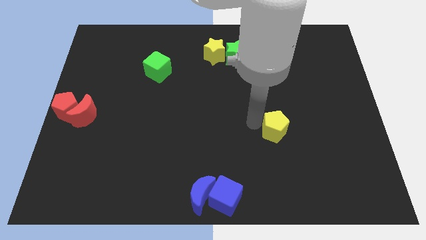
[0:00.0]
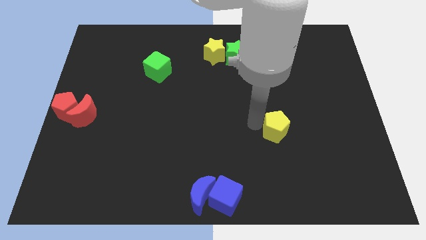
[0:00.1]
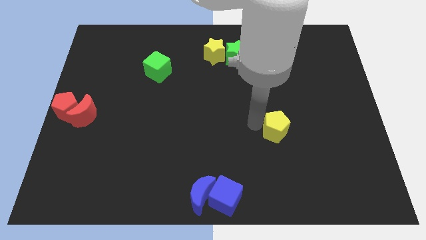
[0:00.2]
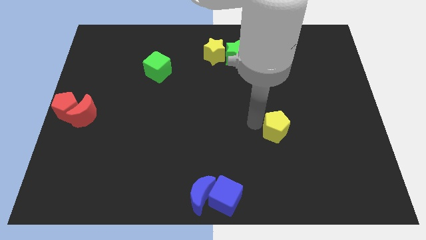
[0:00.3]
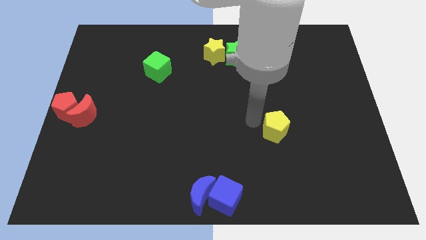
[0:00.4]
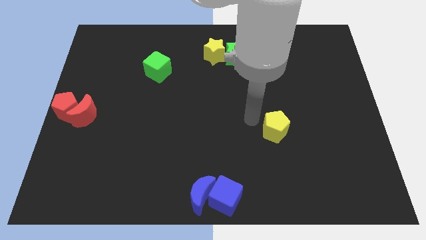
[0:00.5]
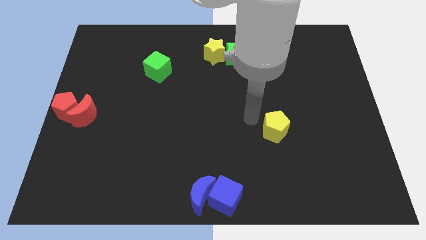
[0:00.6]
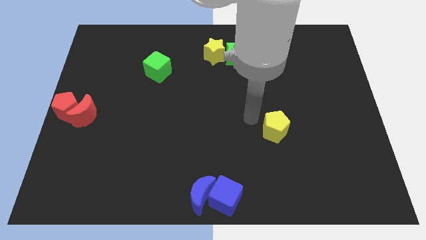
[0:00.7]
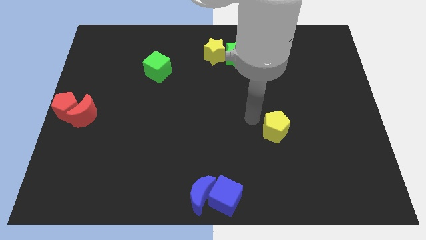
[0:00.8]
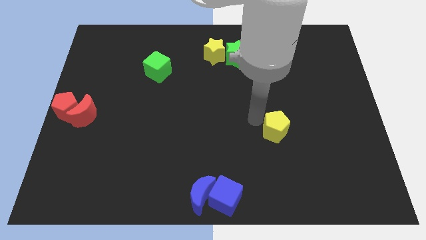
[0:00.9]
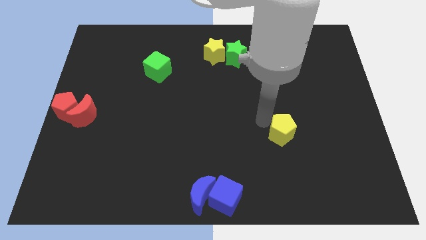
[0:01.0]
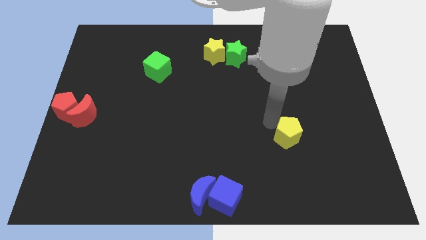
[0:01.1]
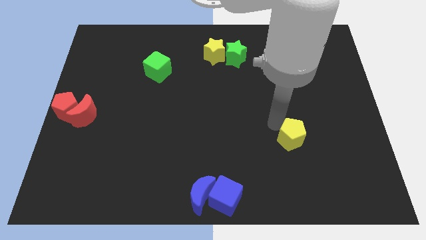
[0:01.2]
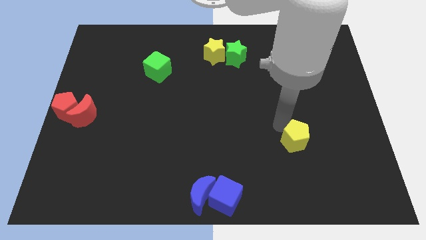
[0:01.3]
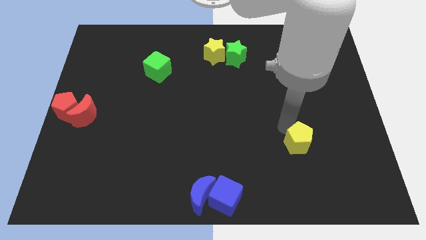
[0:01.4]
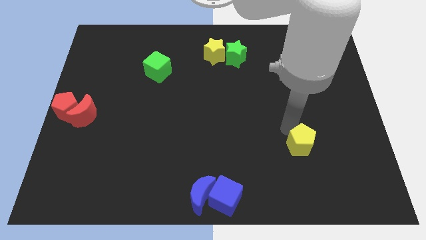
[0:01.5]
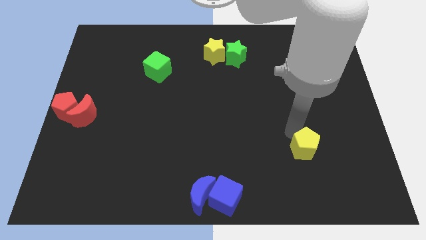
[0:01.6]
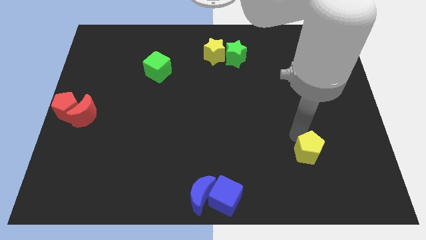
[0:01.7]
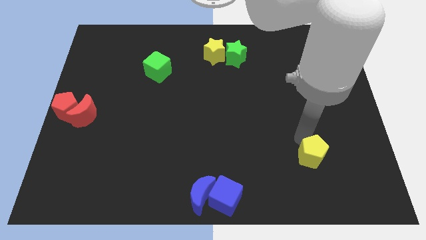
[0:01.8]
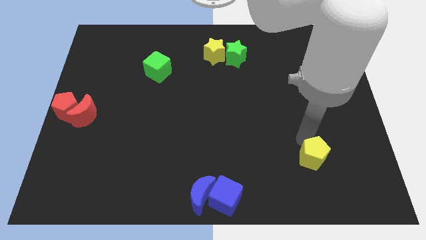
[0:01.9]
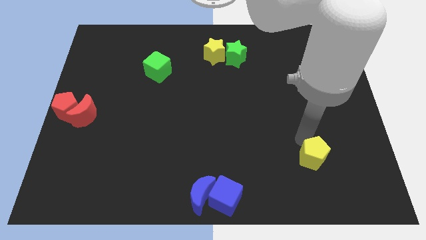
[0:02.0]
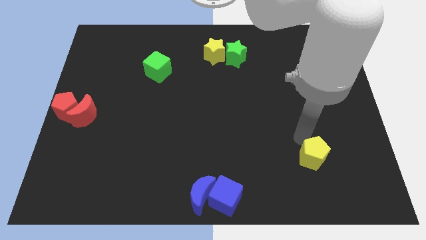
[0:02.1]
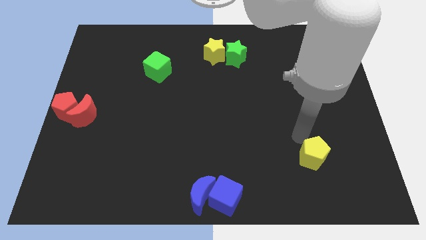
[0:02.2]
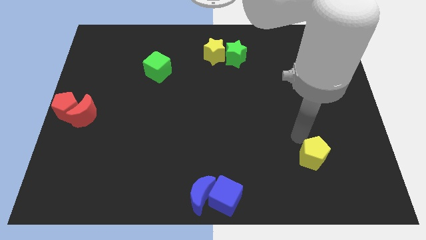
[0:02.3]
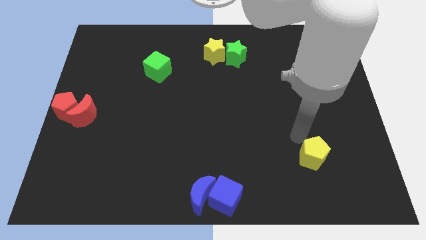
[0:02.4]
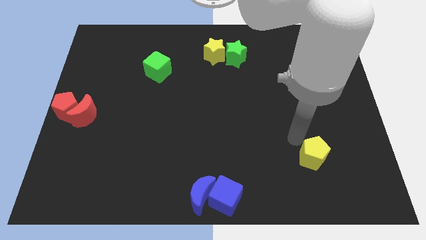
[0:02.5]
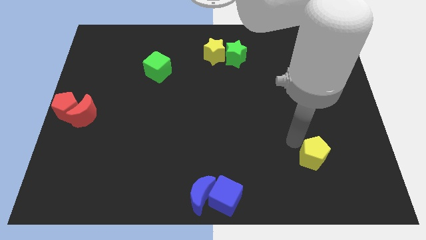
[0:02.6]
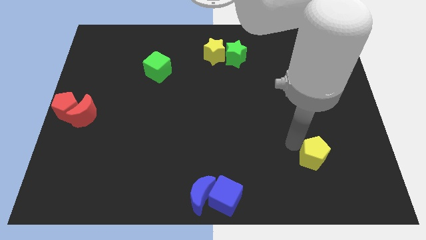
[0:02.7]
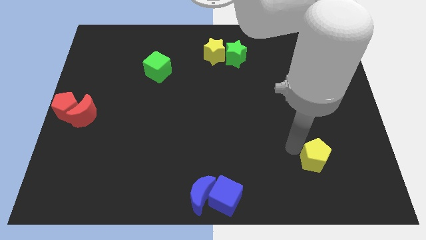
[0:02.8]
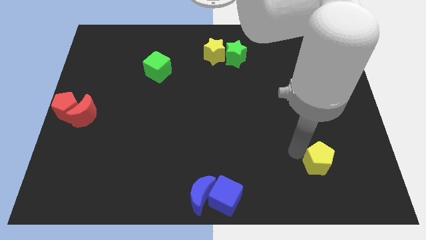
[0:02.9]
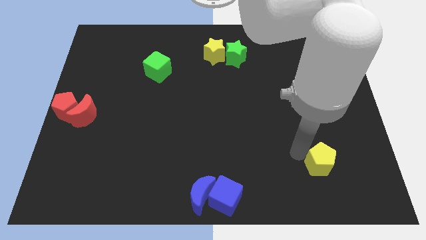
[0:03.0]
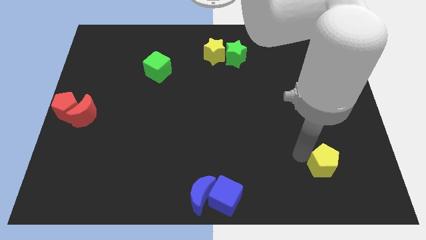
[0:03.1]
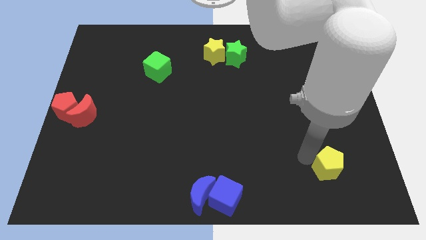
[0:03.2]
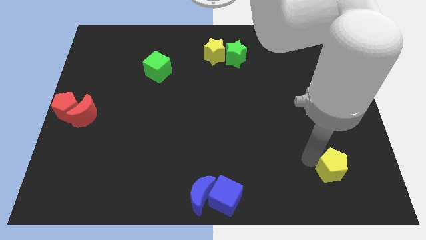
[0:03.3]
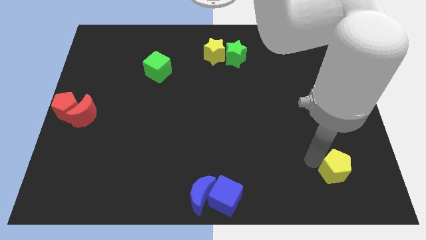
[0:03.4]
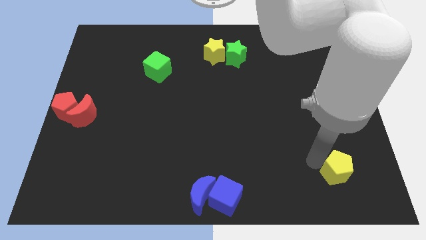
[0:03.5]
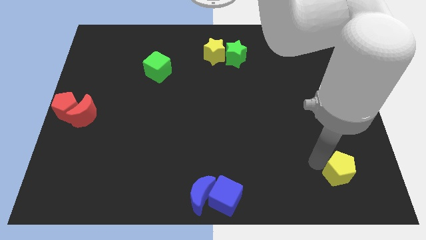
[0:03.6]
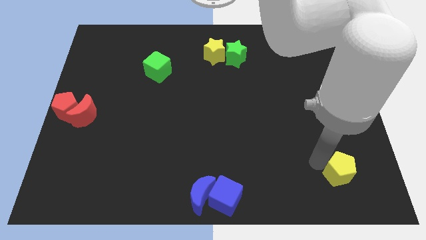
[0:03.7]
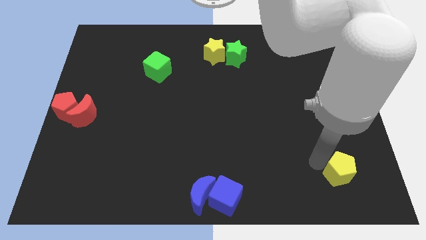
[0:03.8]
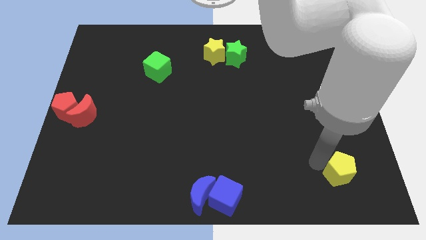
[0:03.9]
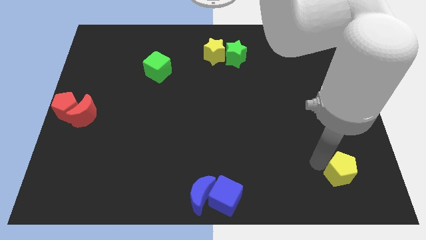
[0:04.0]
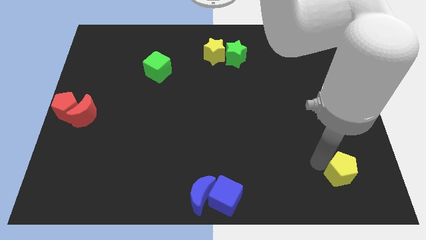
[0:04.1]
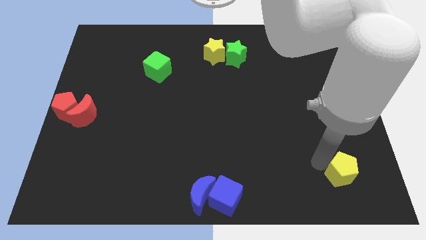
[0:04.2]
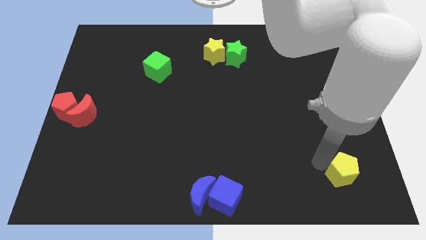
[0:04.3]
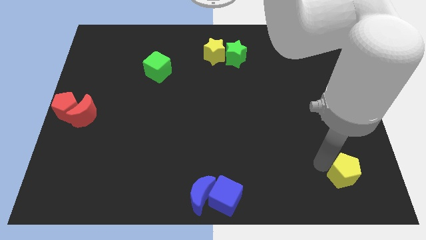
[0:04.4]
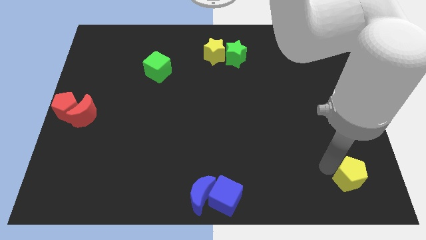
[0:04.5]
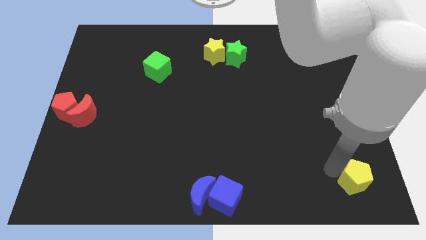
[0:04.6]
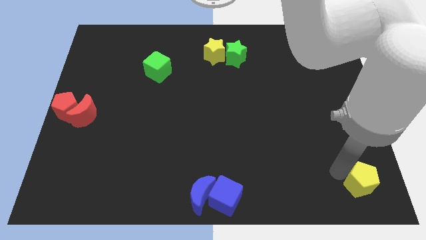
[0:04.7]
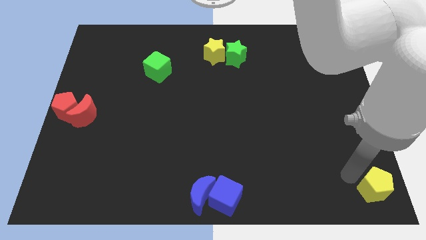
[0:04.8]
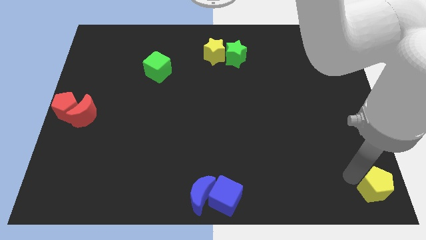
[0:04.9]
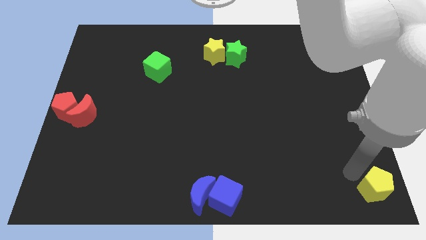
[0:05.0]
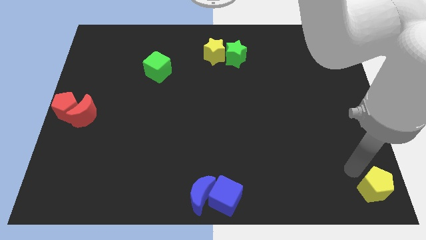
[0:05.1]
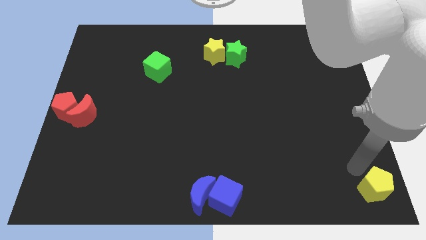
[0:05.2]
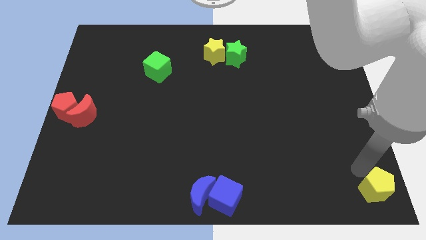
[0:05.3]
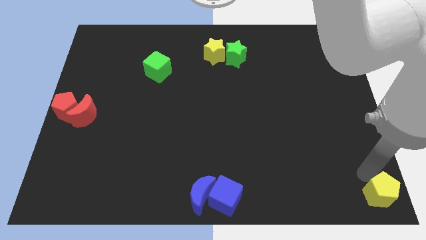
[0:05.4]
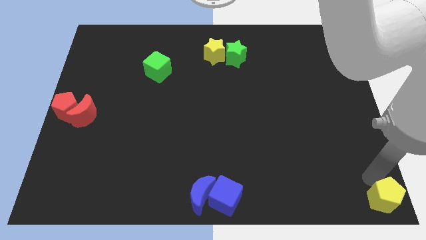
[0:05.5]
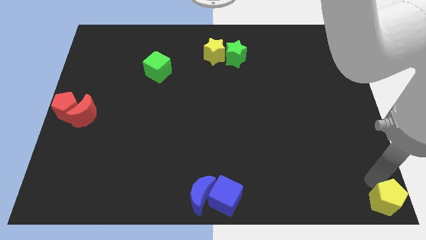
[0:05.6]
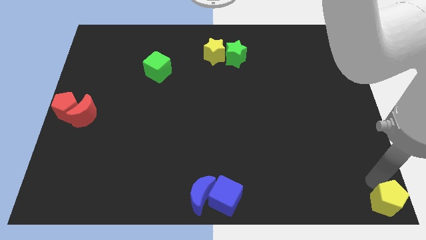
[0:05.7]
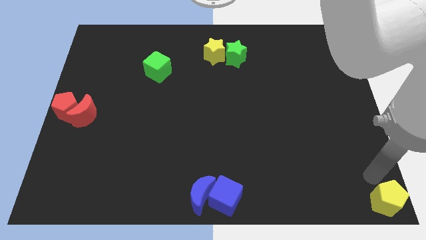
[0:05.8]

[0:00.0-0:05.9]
place yellow pentagon to the bottom right center of the board

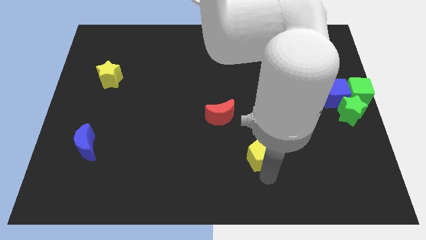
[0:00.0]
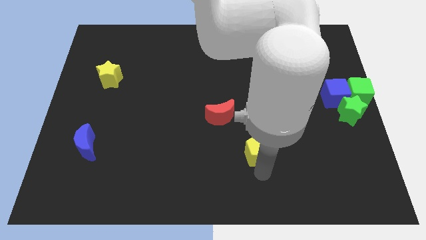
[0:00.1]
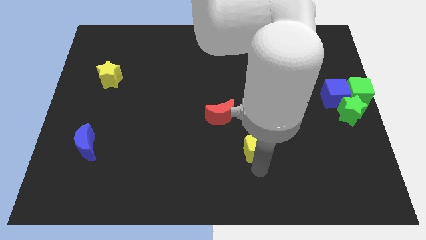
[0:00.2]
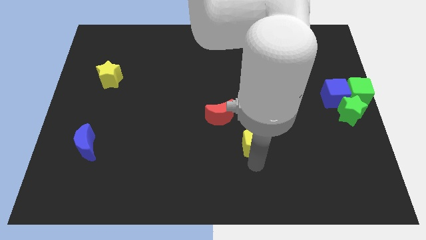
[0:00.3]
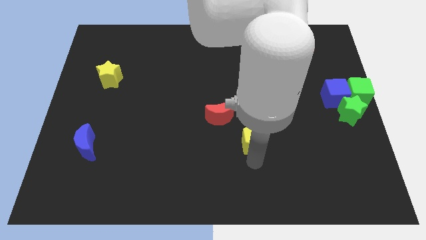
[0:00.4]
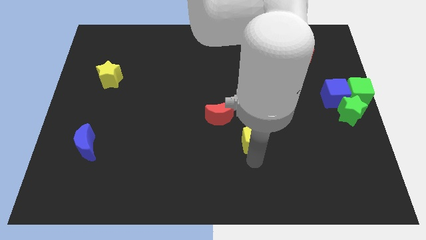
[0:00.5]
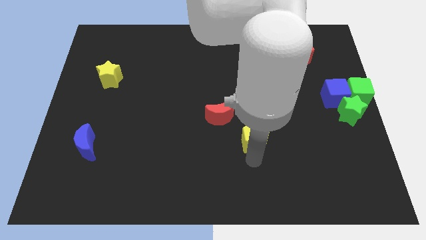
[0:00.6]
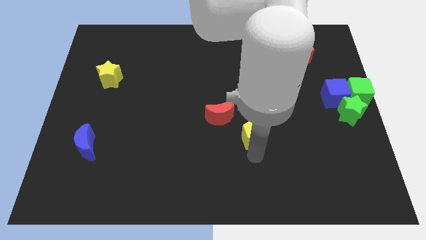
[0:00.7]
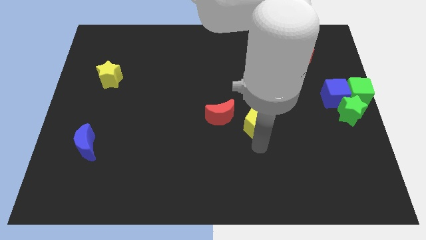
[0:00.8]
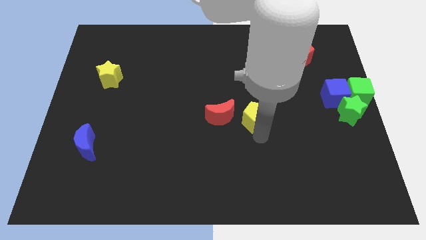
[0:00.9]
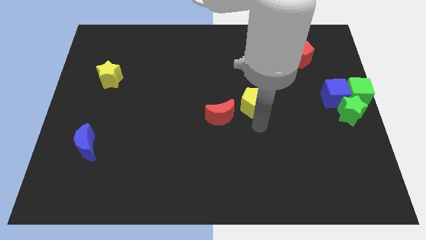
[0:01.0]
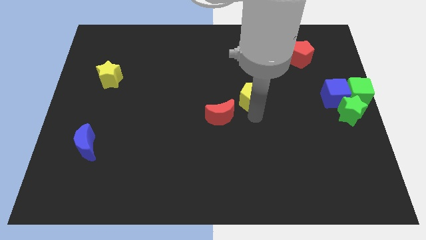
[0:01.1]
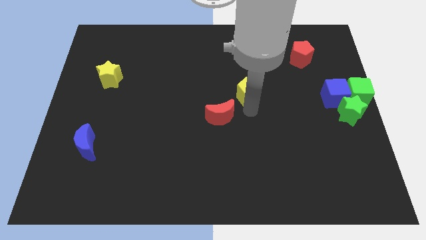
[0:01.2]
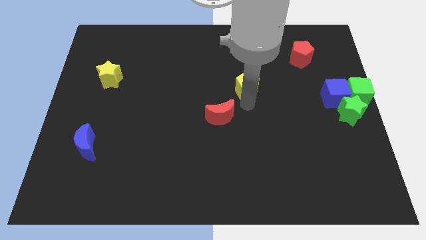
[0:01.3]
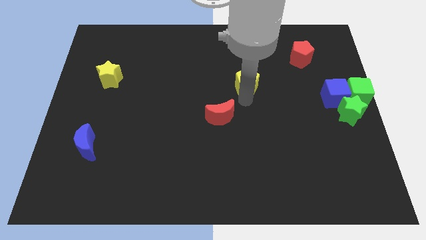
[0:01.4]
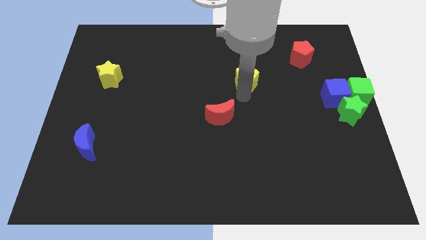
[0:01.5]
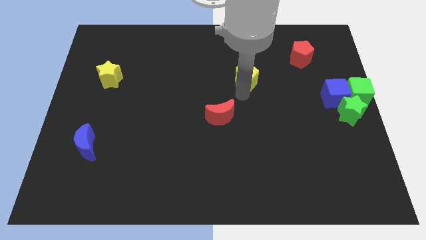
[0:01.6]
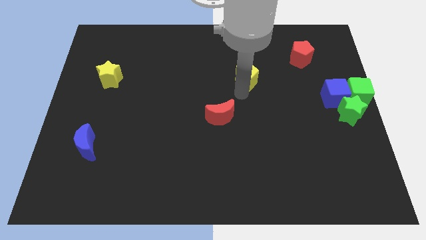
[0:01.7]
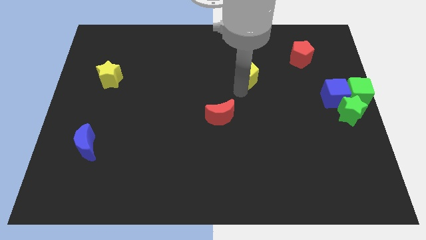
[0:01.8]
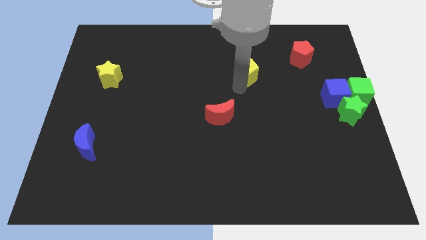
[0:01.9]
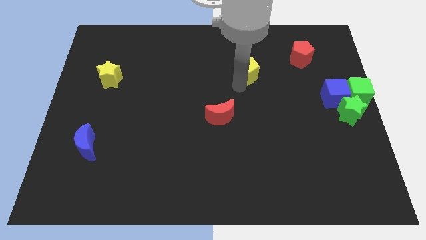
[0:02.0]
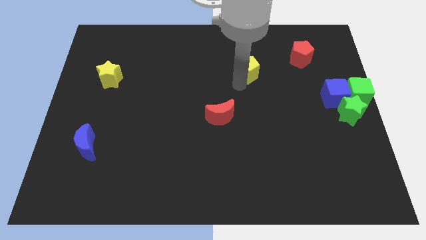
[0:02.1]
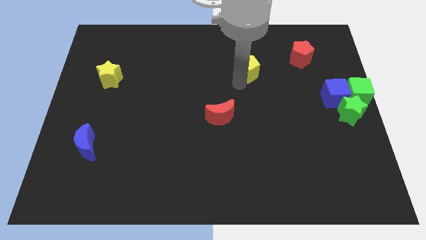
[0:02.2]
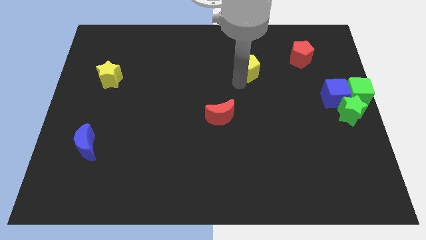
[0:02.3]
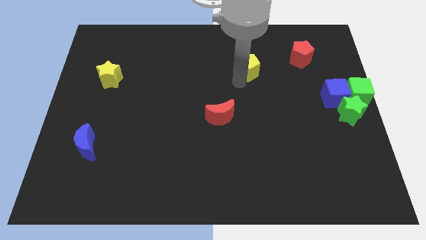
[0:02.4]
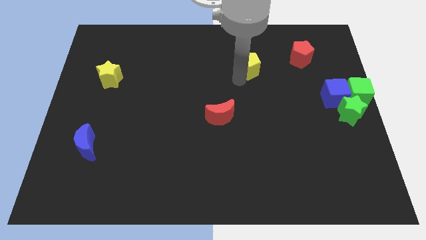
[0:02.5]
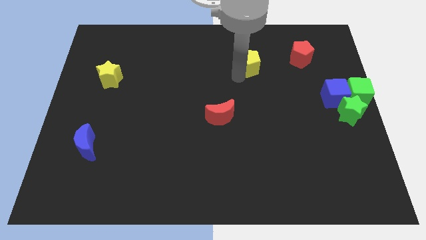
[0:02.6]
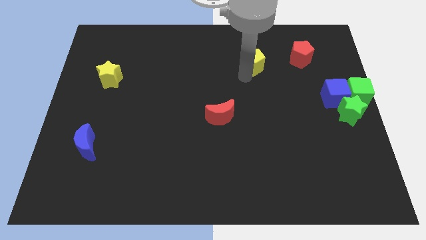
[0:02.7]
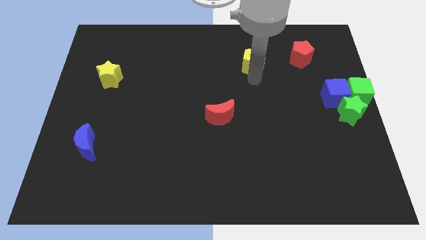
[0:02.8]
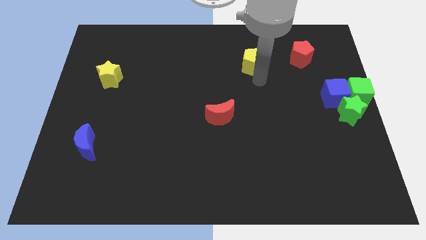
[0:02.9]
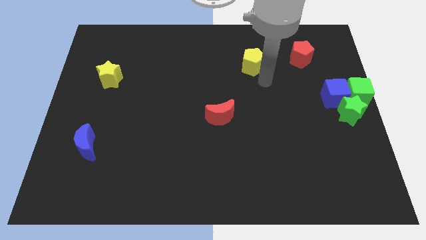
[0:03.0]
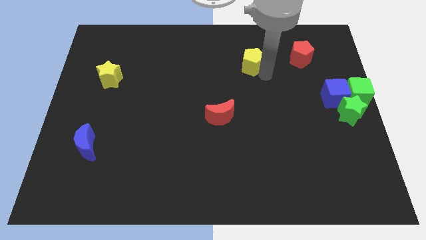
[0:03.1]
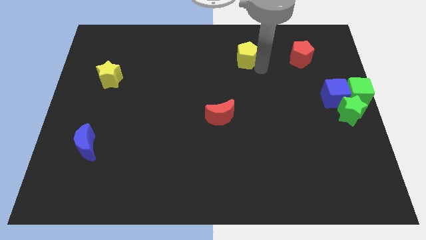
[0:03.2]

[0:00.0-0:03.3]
move the yellow pentagon to the left of the red pentagon
